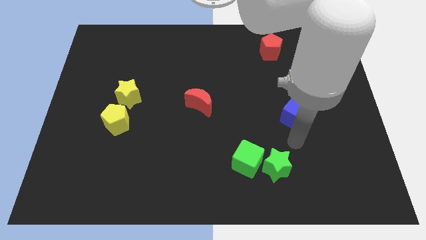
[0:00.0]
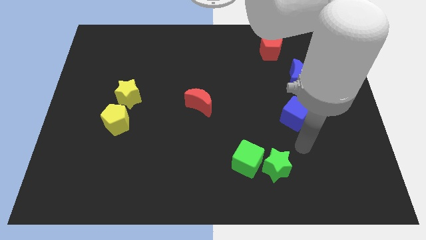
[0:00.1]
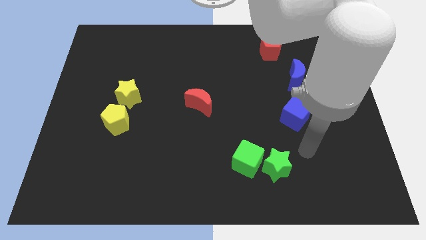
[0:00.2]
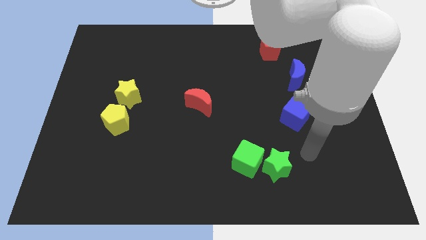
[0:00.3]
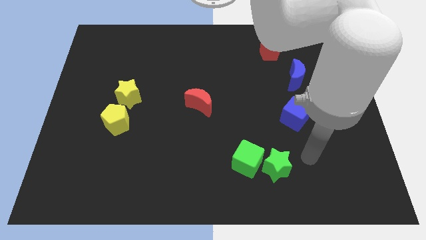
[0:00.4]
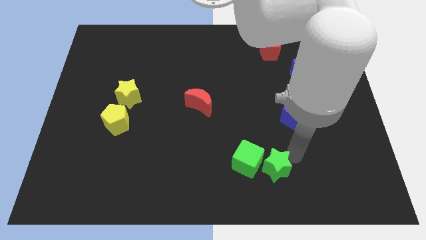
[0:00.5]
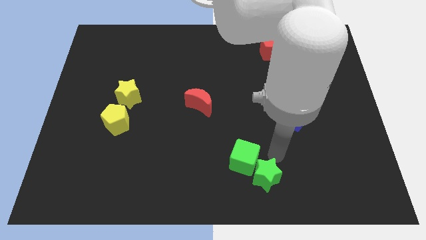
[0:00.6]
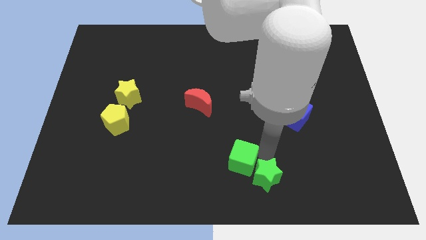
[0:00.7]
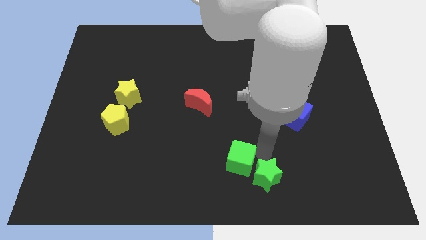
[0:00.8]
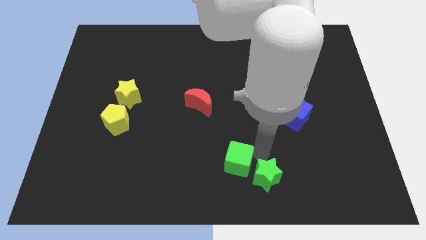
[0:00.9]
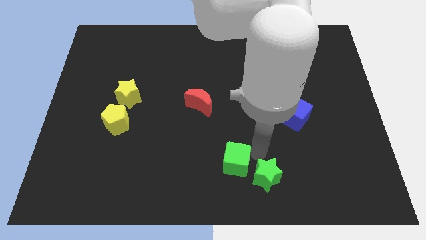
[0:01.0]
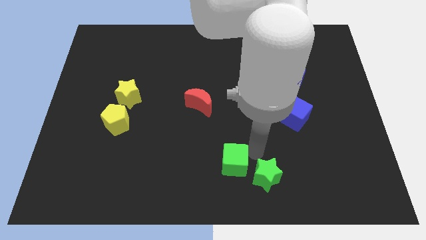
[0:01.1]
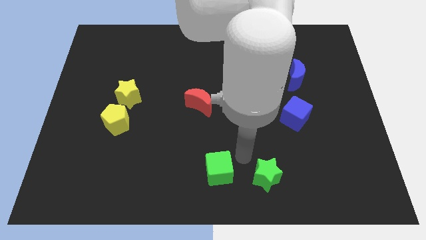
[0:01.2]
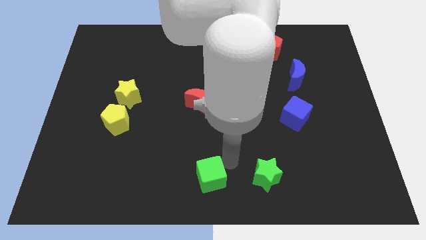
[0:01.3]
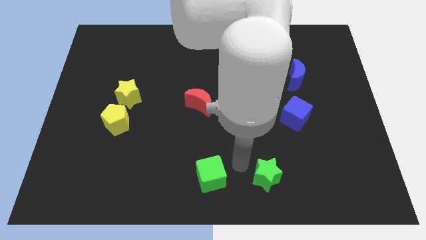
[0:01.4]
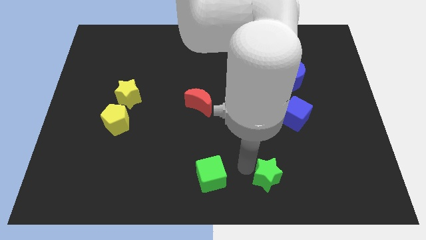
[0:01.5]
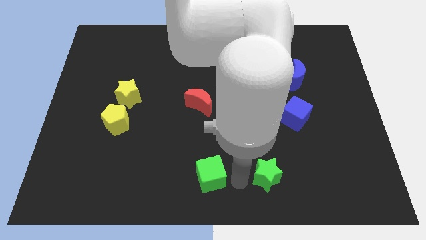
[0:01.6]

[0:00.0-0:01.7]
separate the green star and the green cube

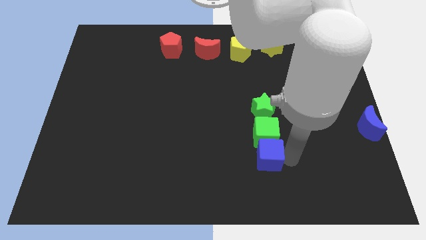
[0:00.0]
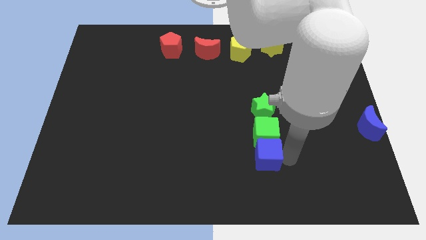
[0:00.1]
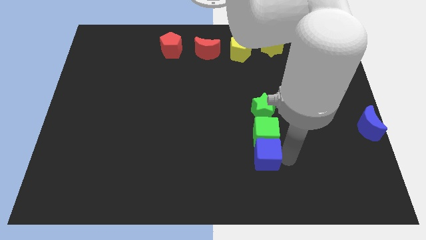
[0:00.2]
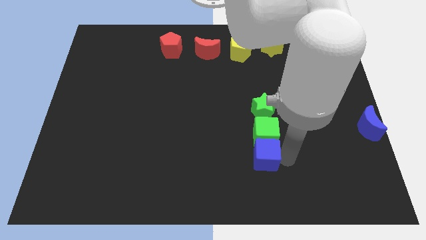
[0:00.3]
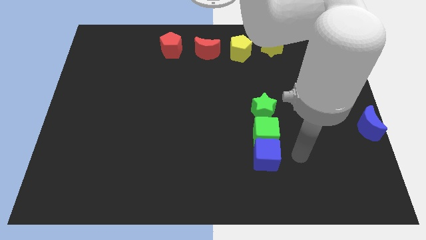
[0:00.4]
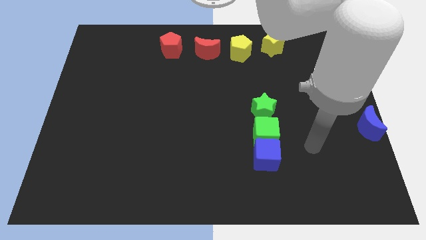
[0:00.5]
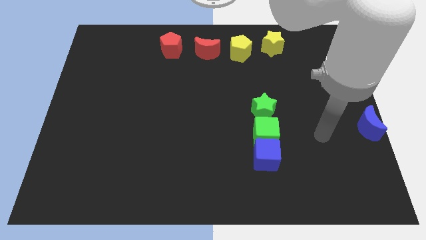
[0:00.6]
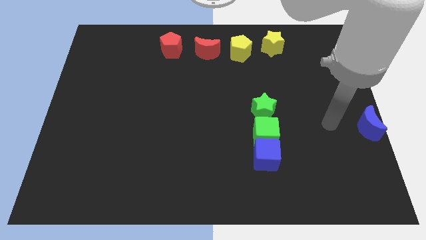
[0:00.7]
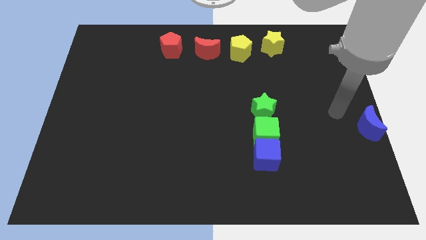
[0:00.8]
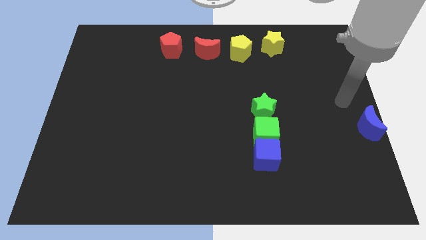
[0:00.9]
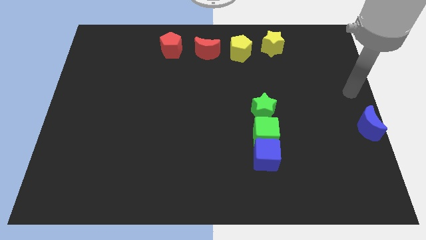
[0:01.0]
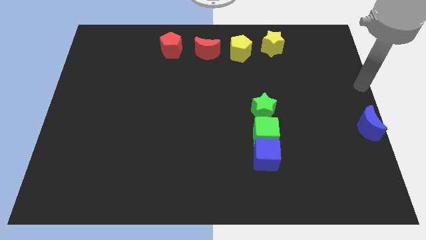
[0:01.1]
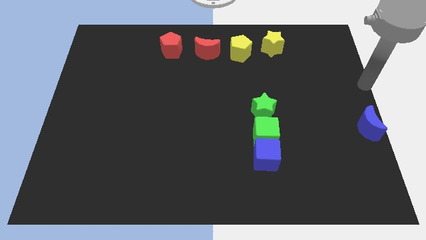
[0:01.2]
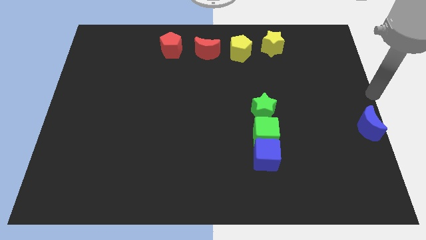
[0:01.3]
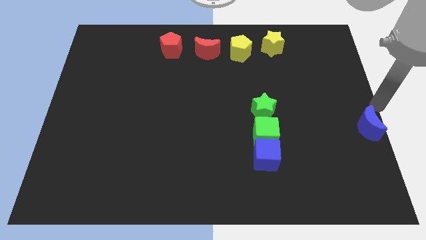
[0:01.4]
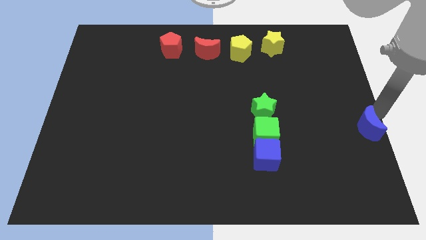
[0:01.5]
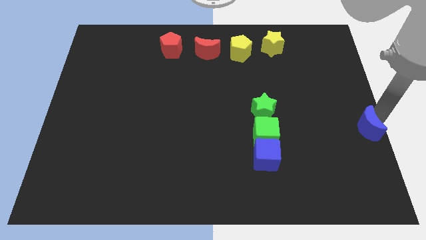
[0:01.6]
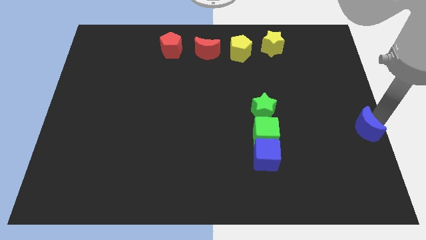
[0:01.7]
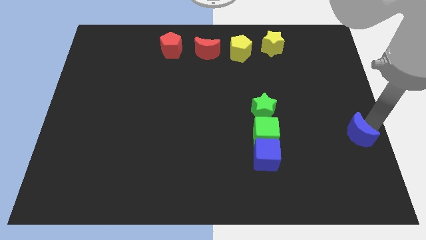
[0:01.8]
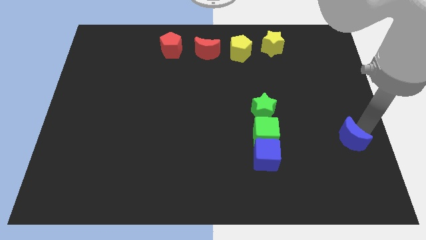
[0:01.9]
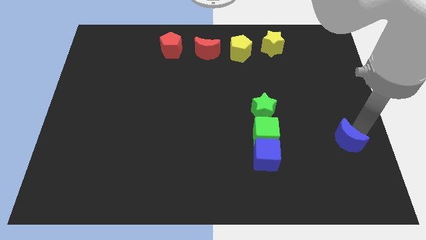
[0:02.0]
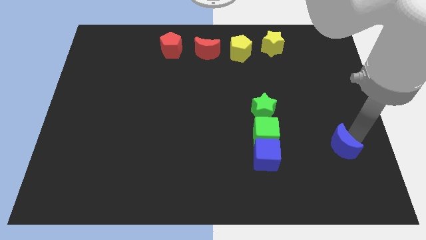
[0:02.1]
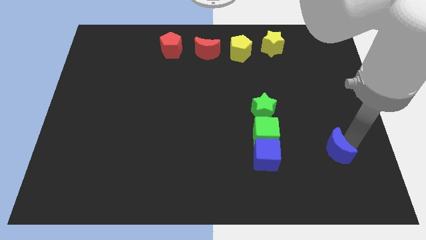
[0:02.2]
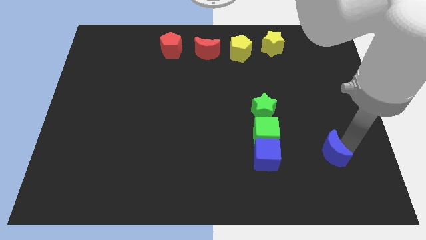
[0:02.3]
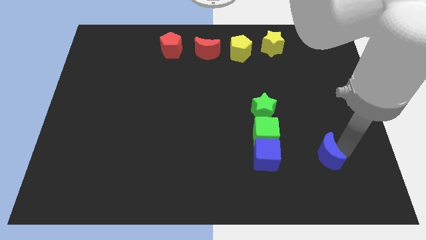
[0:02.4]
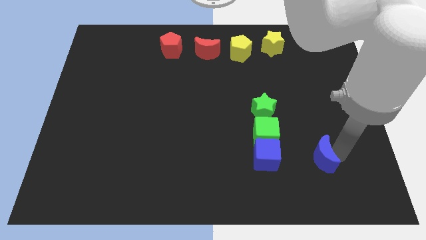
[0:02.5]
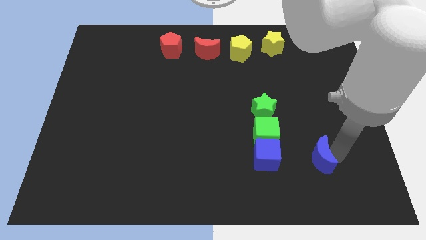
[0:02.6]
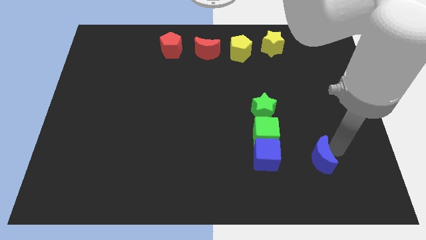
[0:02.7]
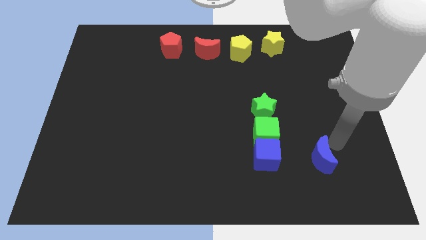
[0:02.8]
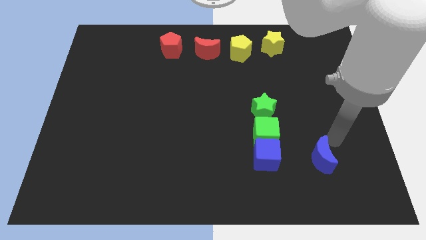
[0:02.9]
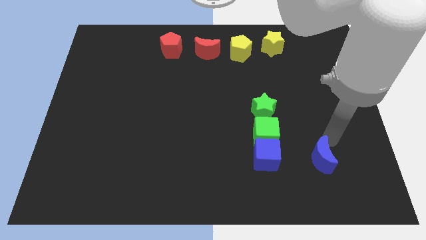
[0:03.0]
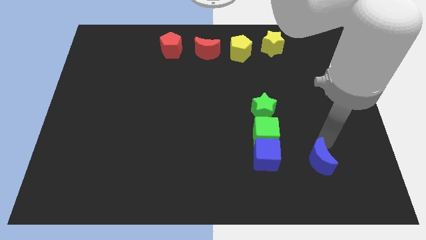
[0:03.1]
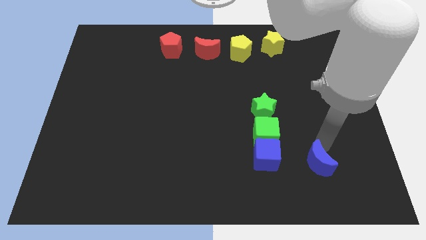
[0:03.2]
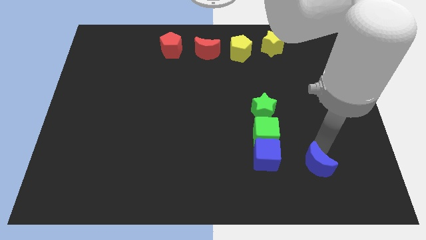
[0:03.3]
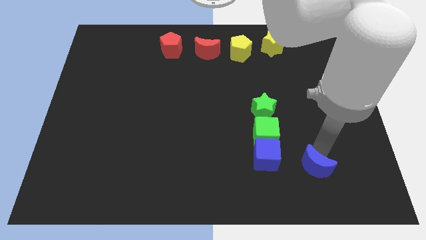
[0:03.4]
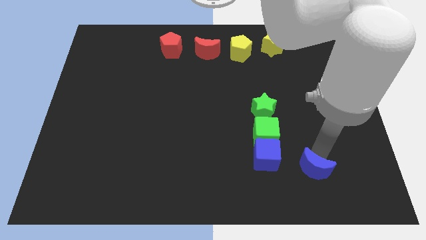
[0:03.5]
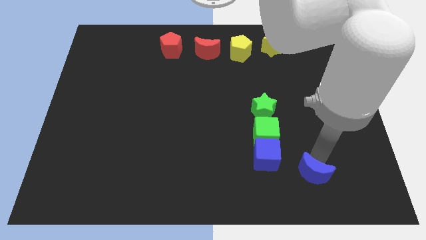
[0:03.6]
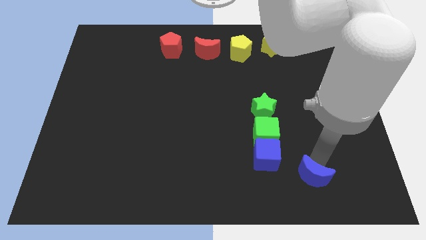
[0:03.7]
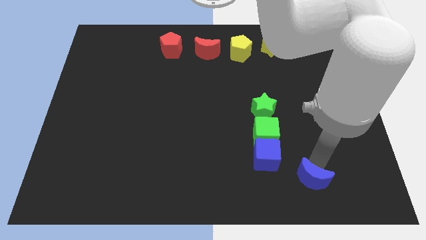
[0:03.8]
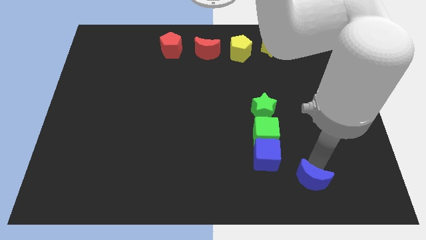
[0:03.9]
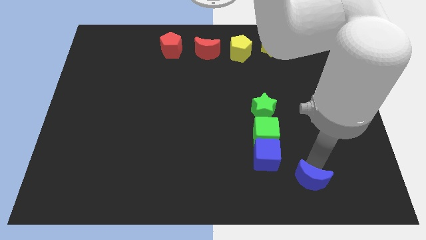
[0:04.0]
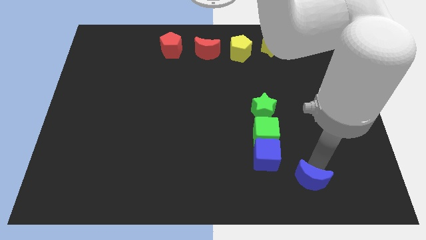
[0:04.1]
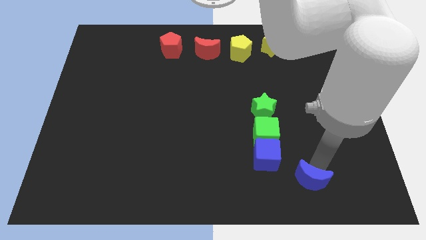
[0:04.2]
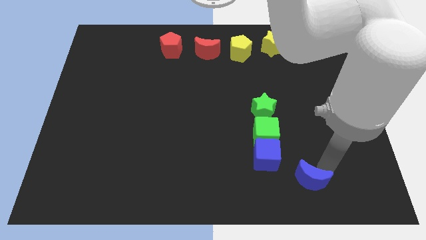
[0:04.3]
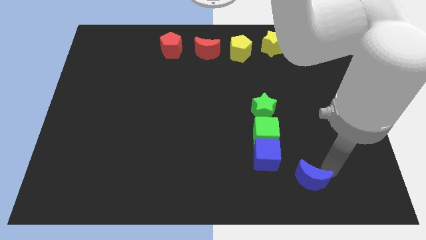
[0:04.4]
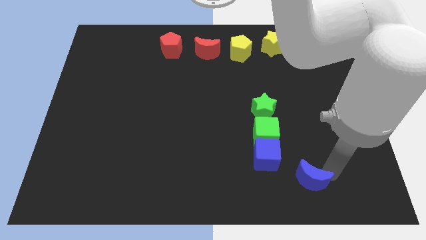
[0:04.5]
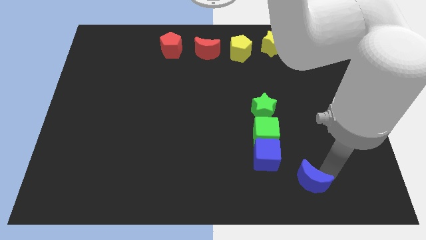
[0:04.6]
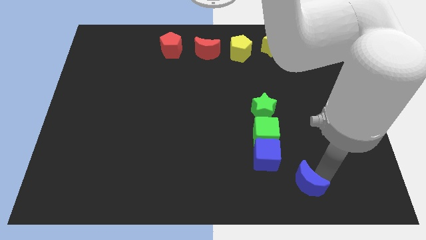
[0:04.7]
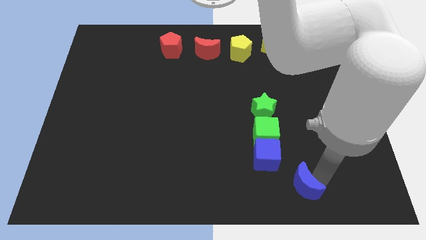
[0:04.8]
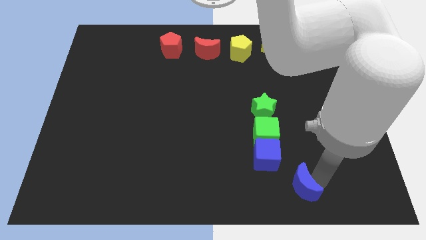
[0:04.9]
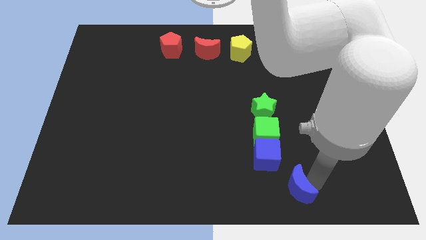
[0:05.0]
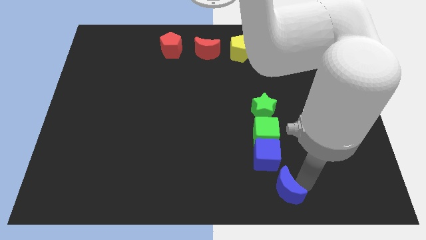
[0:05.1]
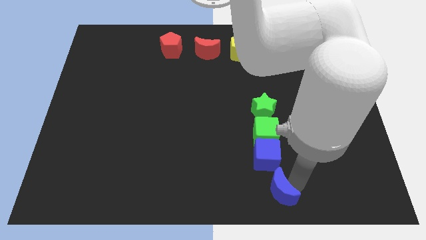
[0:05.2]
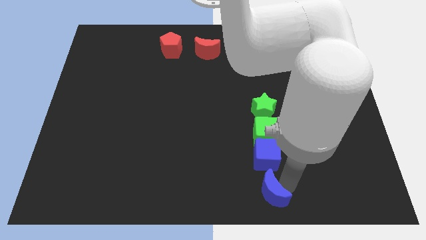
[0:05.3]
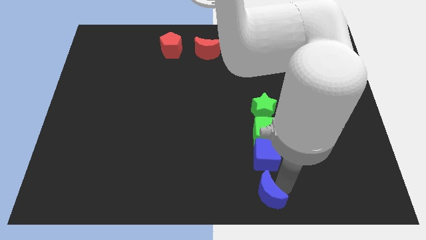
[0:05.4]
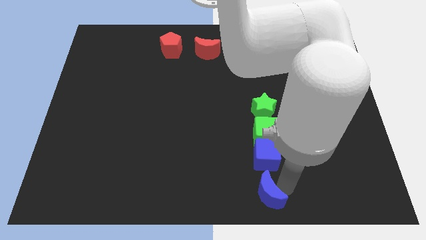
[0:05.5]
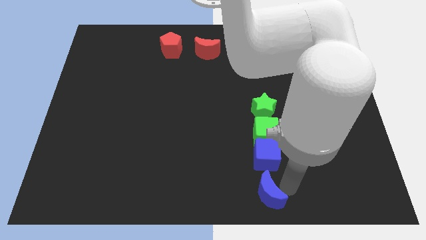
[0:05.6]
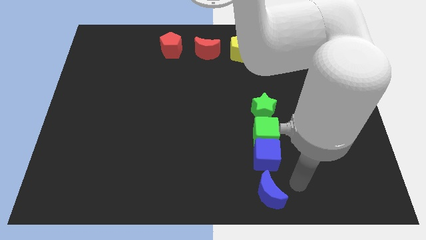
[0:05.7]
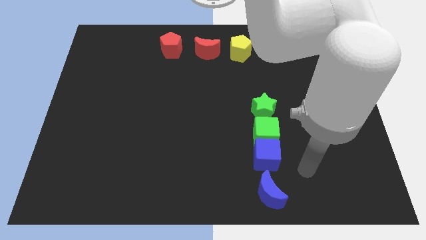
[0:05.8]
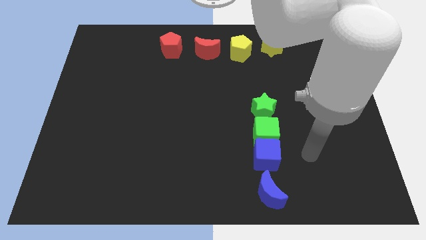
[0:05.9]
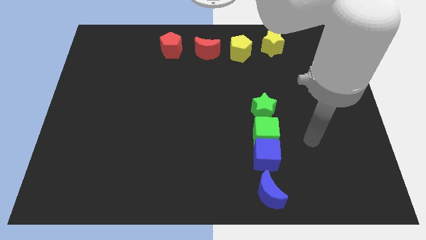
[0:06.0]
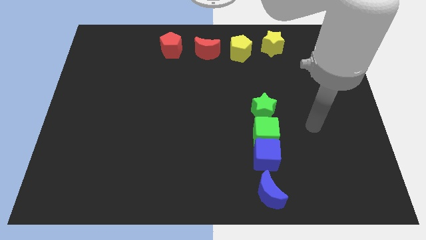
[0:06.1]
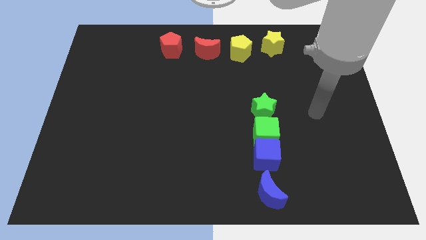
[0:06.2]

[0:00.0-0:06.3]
place the blue semicircle vertically below the blue cube

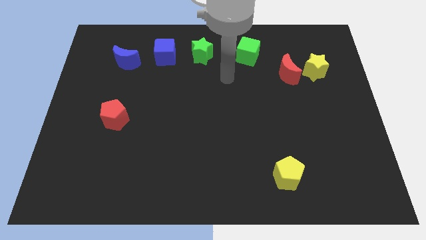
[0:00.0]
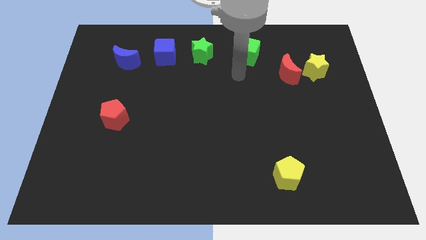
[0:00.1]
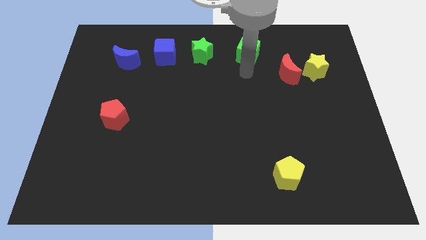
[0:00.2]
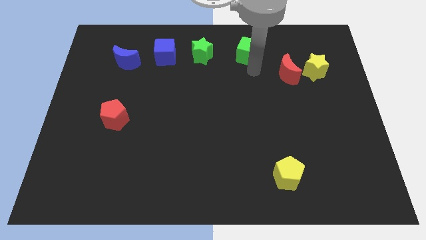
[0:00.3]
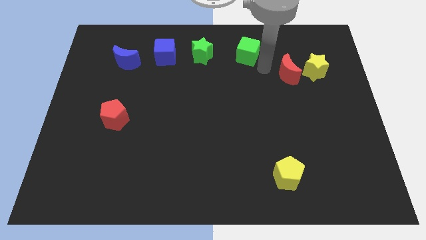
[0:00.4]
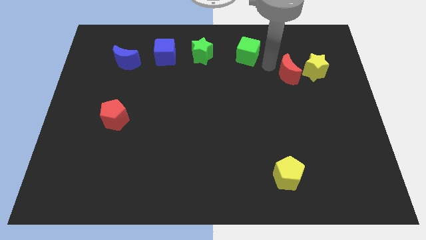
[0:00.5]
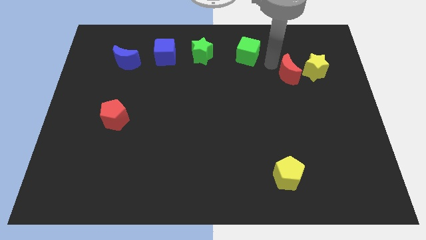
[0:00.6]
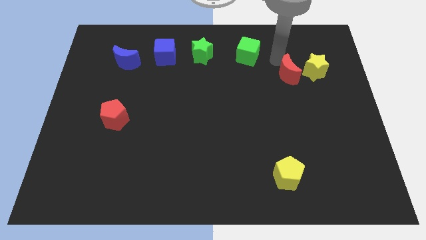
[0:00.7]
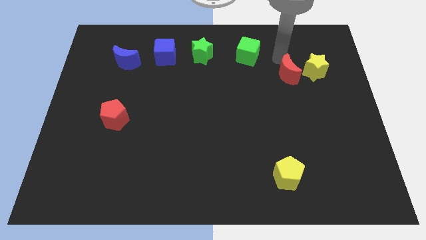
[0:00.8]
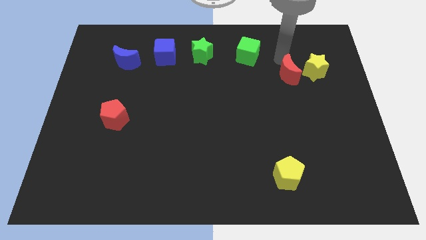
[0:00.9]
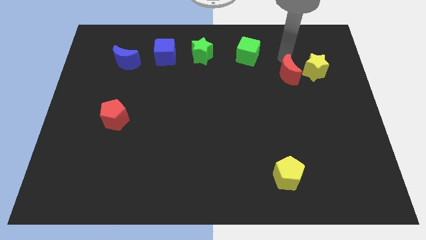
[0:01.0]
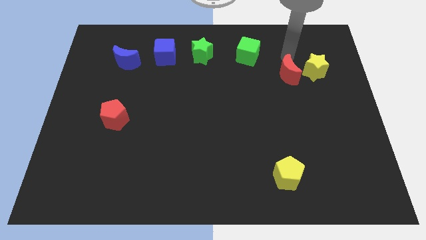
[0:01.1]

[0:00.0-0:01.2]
point your arm to the top of the red crescent
